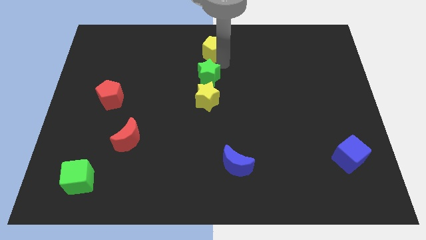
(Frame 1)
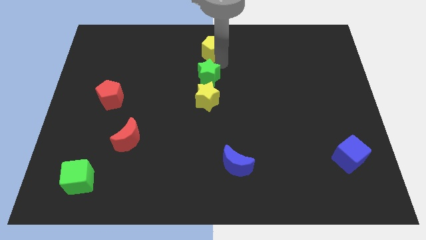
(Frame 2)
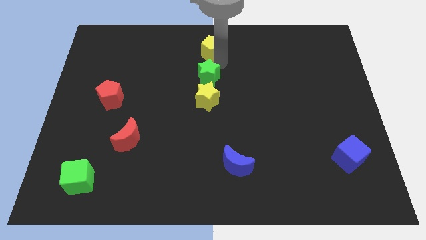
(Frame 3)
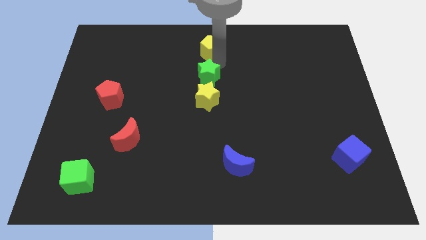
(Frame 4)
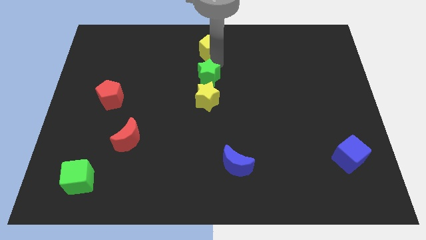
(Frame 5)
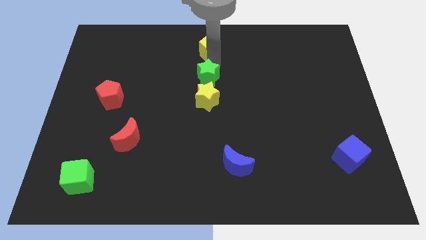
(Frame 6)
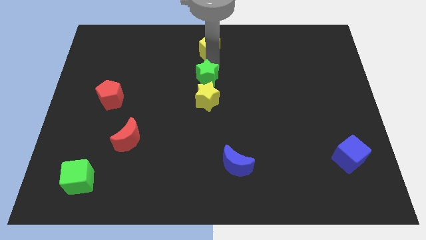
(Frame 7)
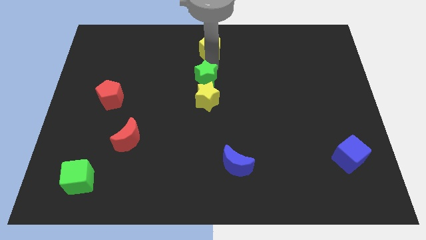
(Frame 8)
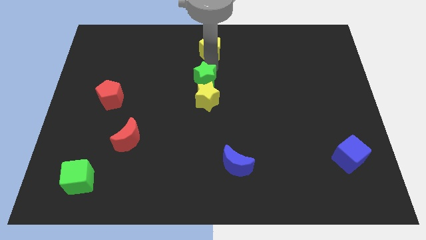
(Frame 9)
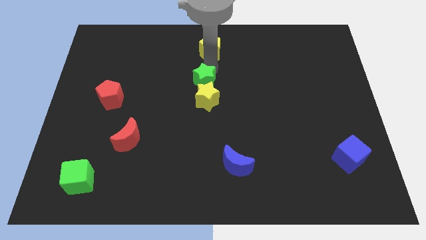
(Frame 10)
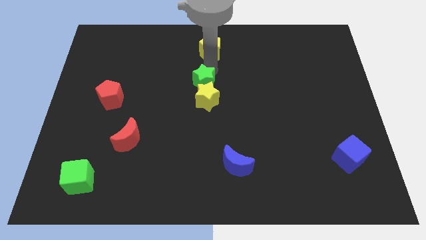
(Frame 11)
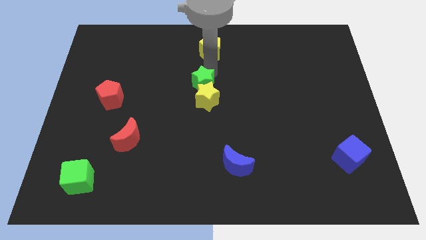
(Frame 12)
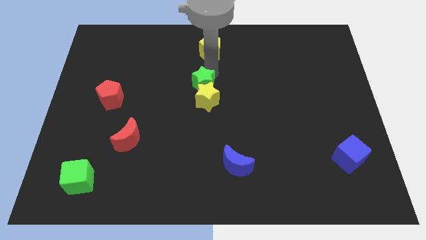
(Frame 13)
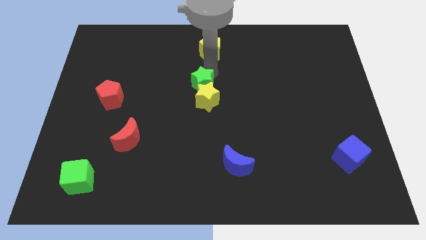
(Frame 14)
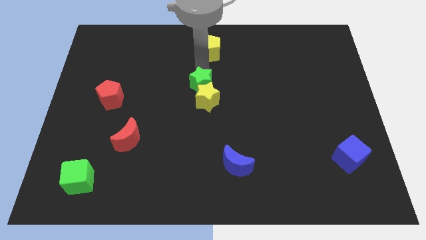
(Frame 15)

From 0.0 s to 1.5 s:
slightly move green star in between the yellow blocks

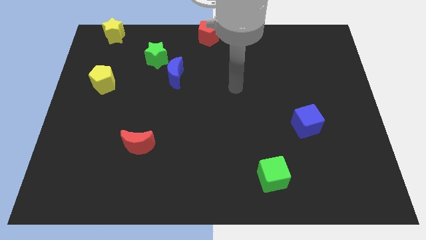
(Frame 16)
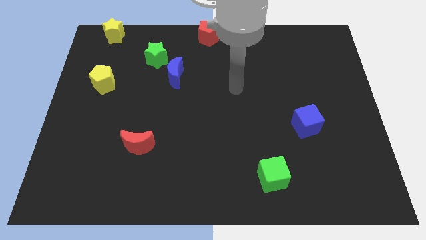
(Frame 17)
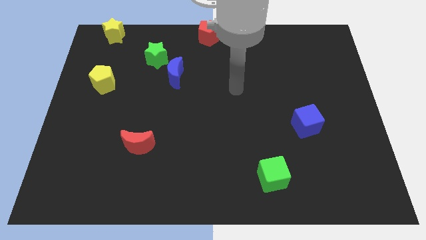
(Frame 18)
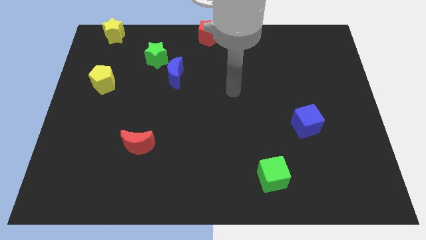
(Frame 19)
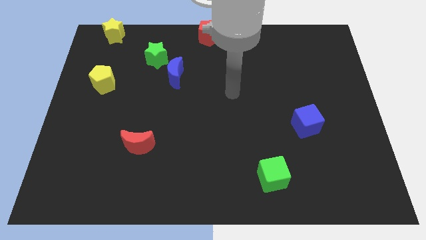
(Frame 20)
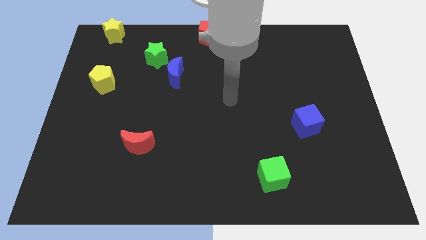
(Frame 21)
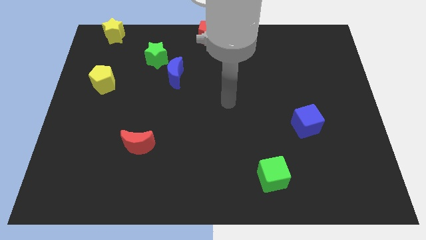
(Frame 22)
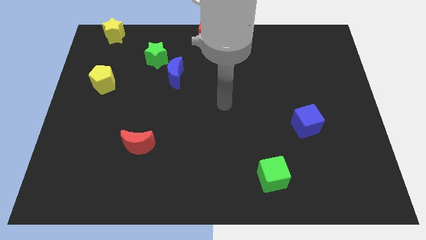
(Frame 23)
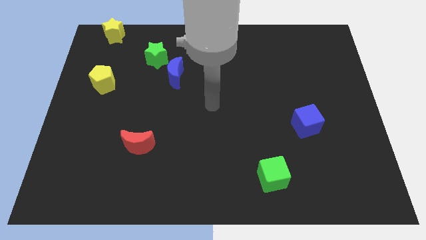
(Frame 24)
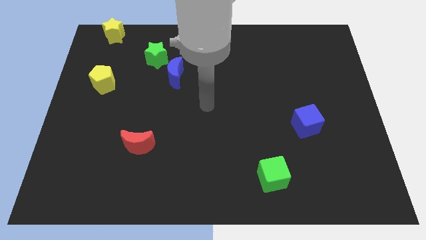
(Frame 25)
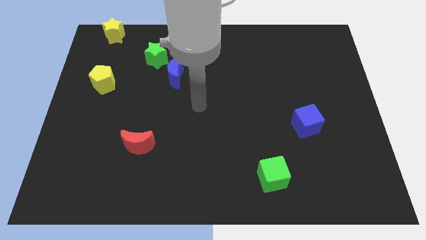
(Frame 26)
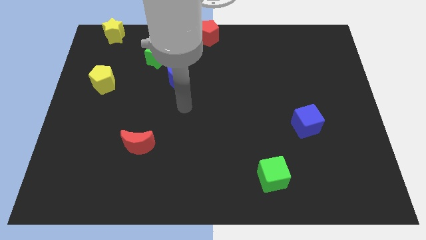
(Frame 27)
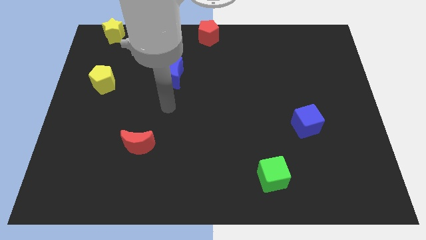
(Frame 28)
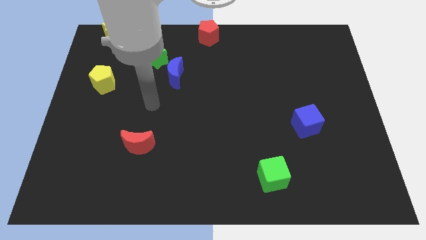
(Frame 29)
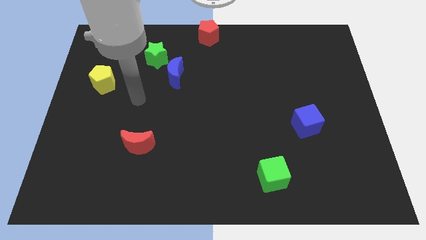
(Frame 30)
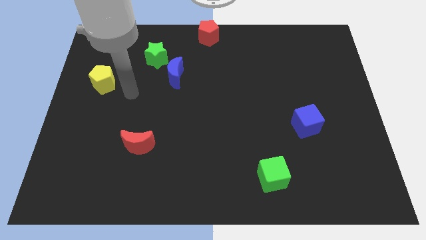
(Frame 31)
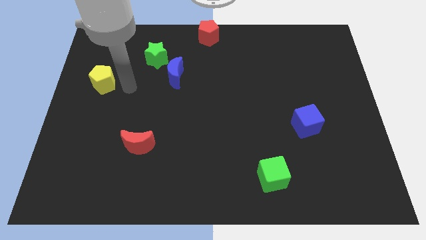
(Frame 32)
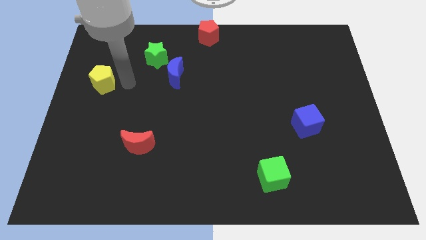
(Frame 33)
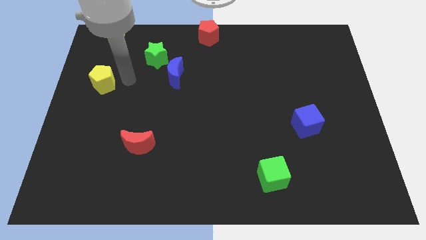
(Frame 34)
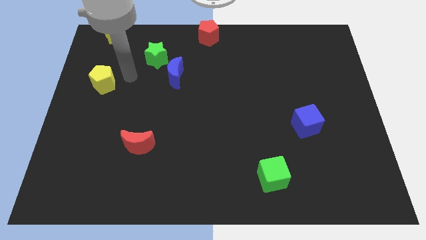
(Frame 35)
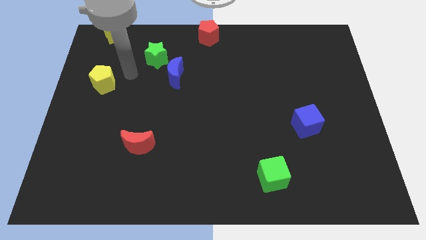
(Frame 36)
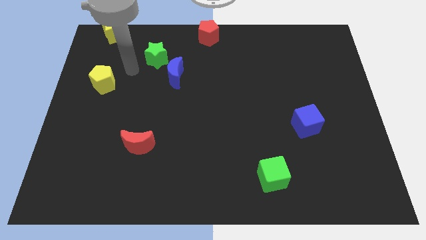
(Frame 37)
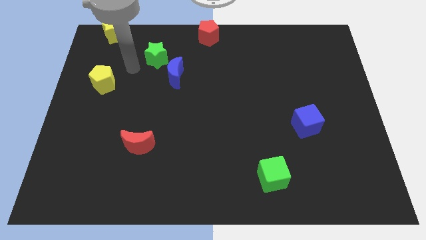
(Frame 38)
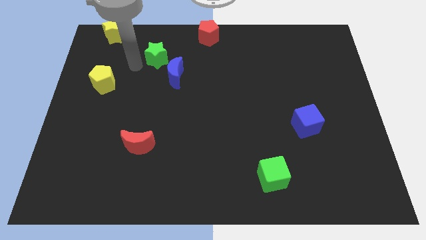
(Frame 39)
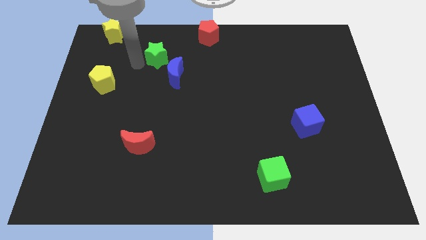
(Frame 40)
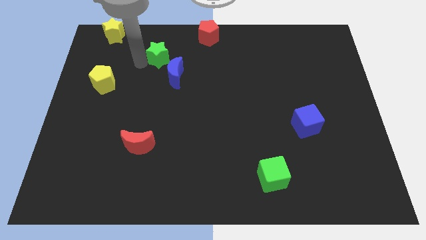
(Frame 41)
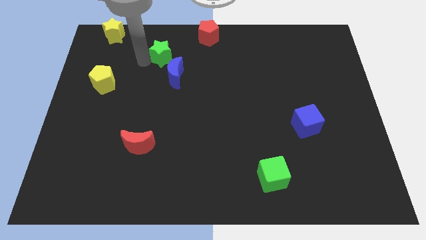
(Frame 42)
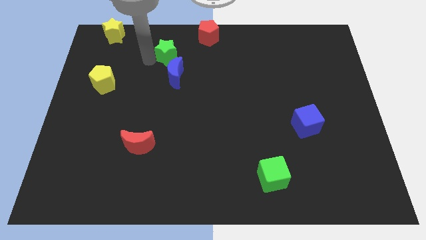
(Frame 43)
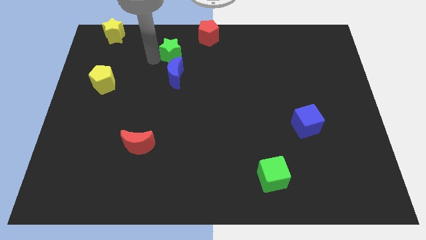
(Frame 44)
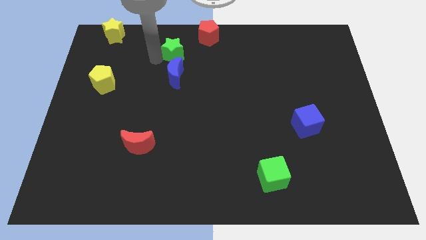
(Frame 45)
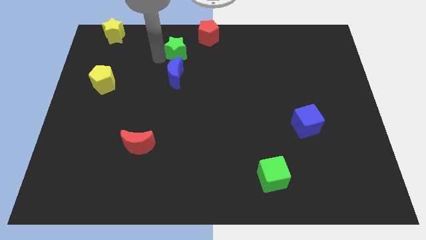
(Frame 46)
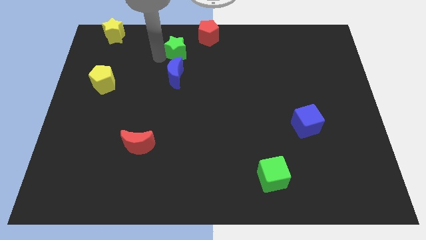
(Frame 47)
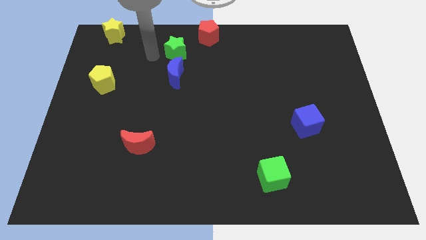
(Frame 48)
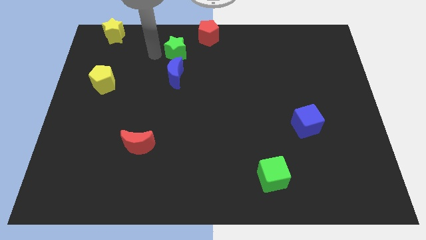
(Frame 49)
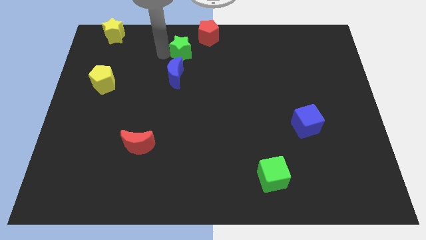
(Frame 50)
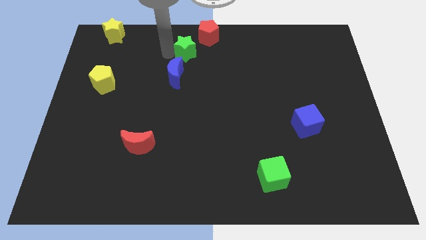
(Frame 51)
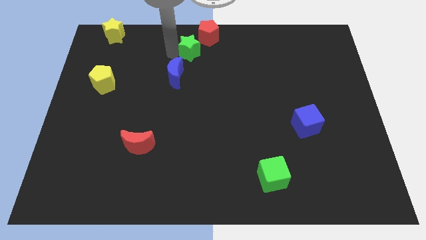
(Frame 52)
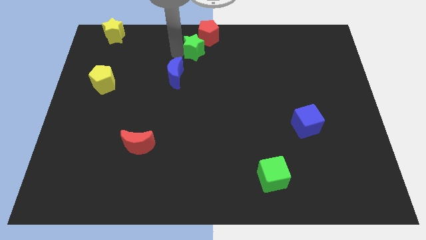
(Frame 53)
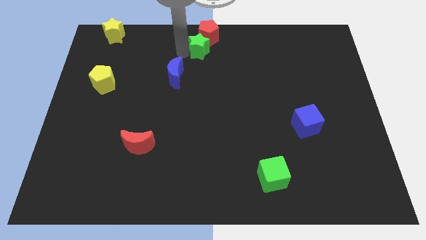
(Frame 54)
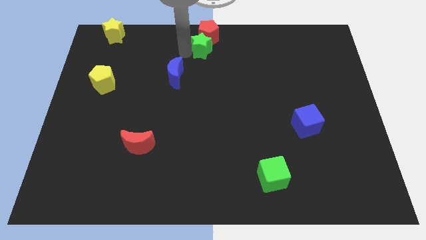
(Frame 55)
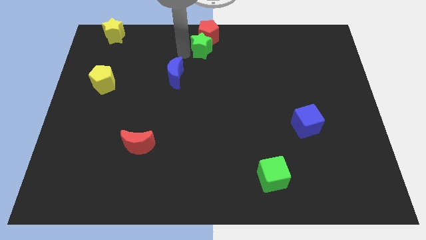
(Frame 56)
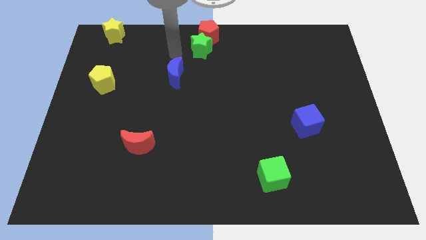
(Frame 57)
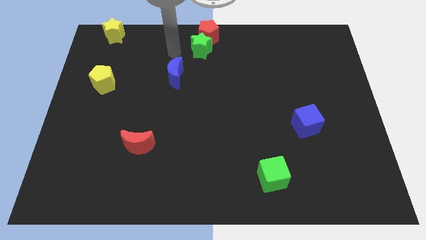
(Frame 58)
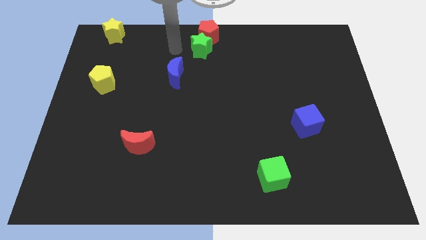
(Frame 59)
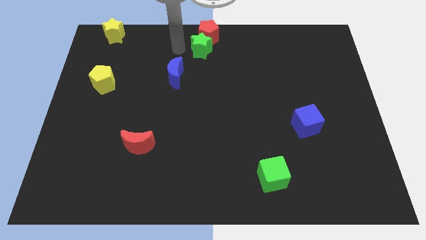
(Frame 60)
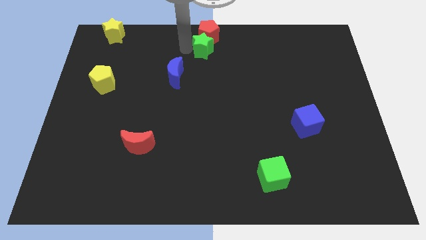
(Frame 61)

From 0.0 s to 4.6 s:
place the green star close to the red pentagon

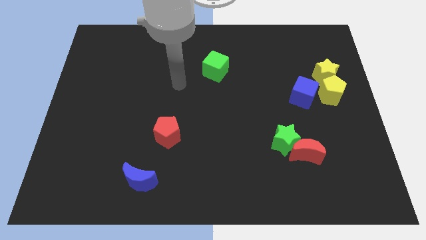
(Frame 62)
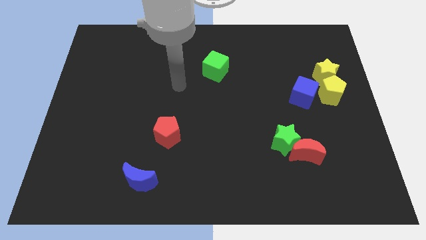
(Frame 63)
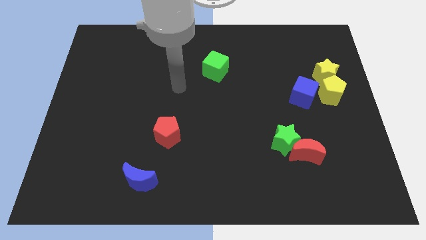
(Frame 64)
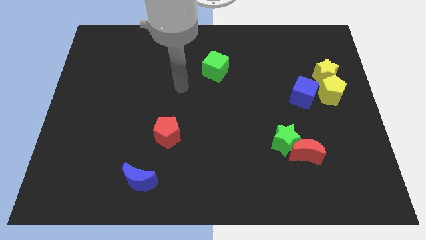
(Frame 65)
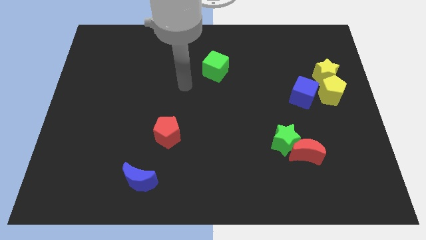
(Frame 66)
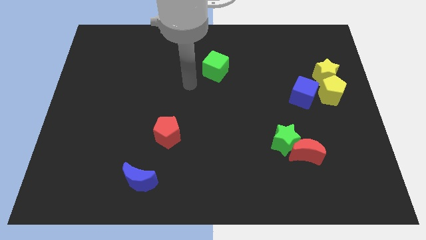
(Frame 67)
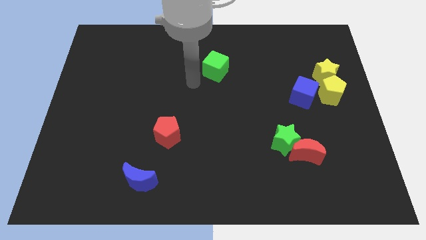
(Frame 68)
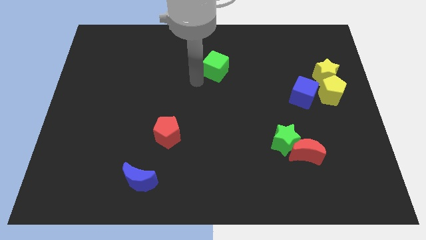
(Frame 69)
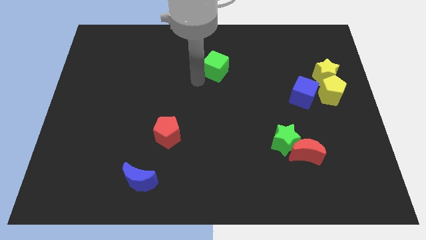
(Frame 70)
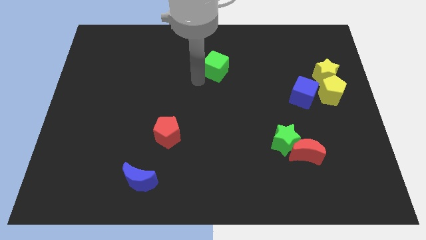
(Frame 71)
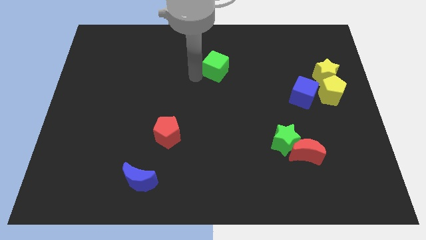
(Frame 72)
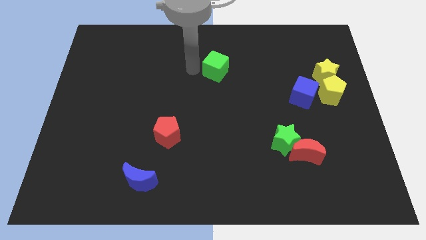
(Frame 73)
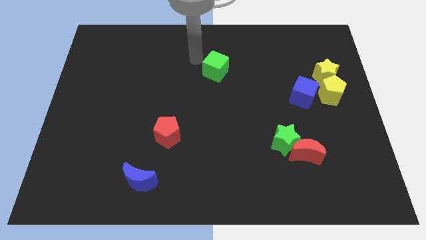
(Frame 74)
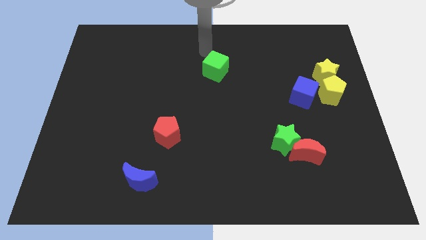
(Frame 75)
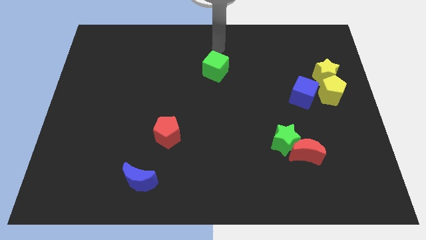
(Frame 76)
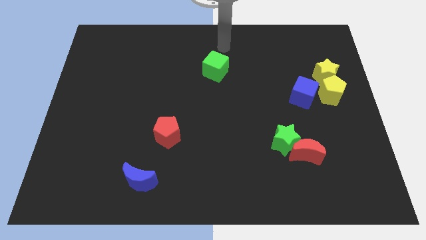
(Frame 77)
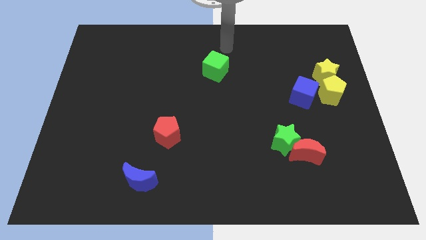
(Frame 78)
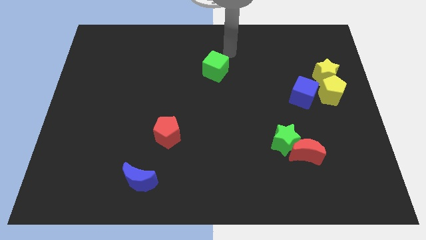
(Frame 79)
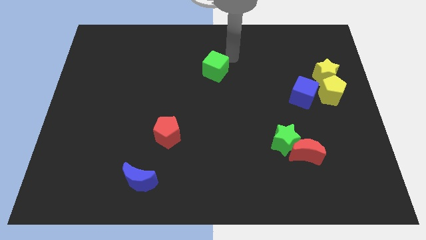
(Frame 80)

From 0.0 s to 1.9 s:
move your arm close to the green cube

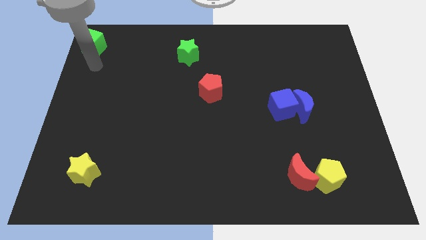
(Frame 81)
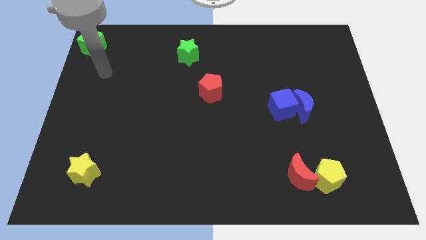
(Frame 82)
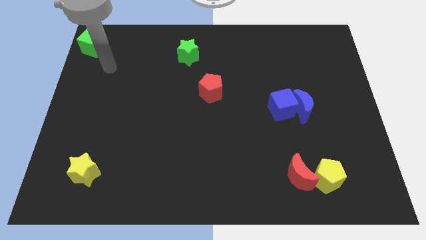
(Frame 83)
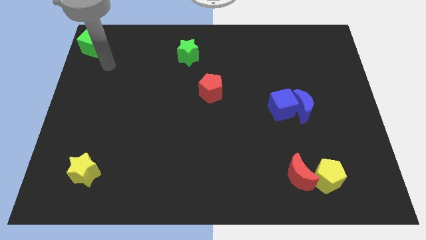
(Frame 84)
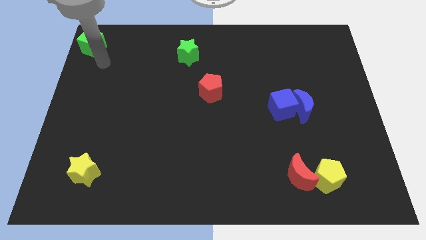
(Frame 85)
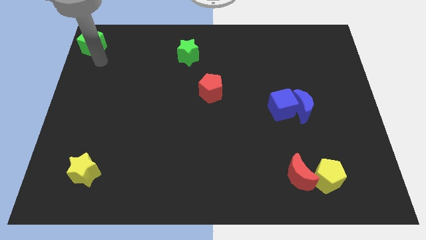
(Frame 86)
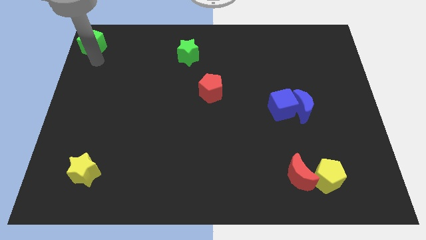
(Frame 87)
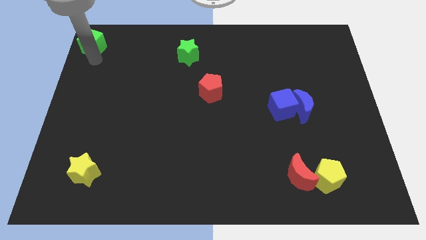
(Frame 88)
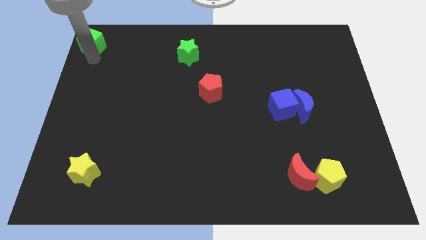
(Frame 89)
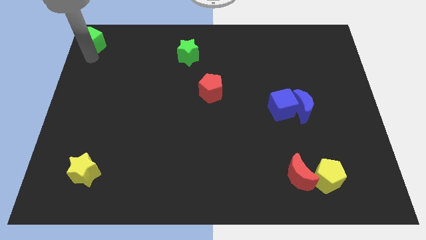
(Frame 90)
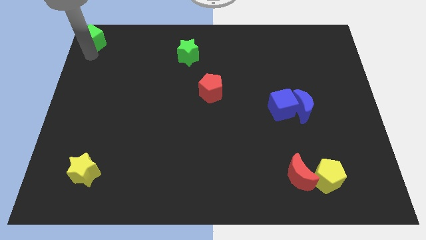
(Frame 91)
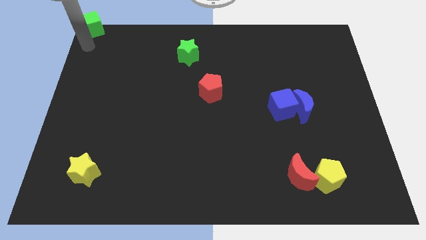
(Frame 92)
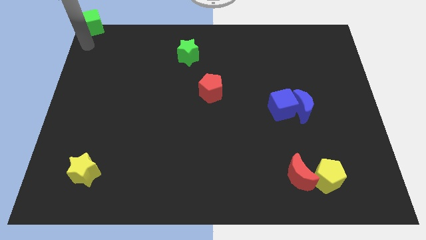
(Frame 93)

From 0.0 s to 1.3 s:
move the green cube to the top left of the board
